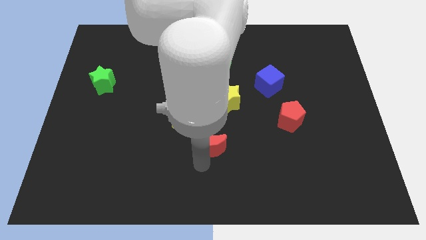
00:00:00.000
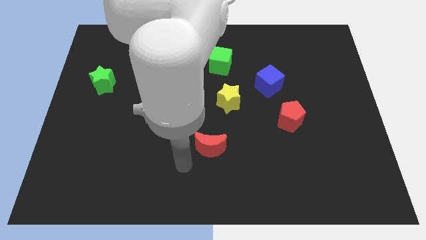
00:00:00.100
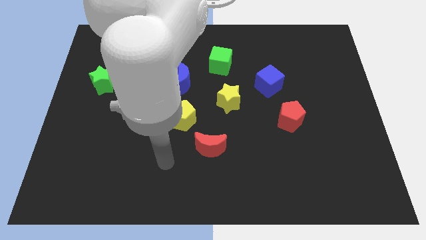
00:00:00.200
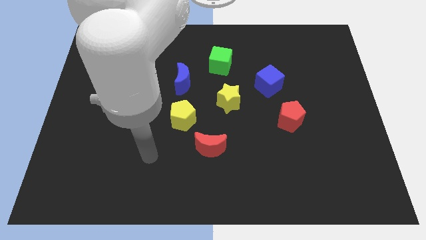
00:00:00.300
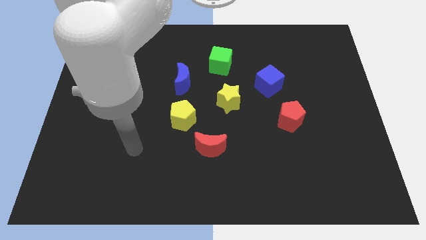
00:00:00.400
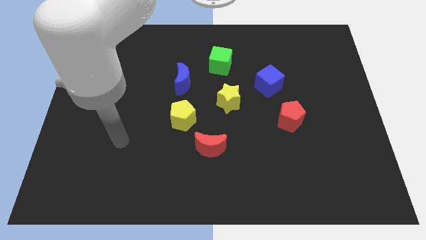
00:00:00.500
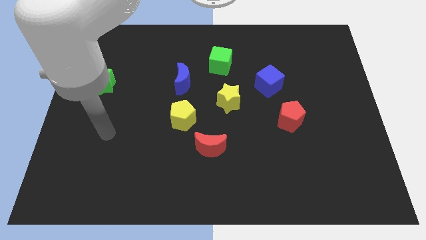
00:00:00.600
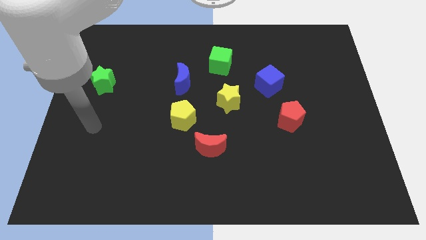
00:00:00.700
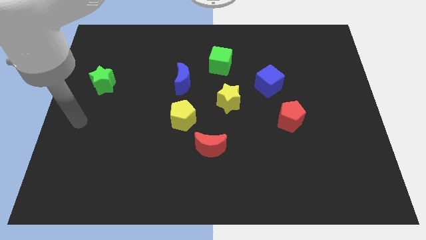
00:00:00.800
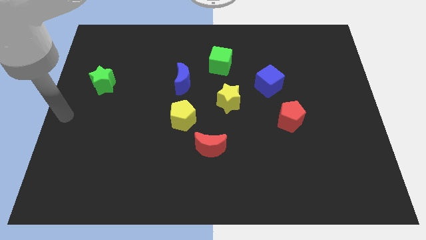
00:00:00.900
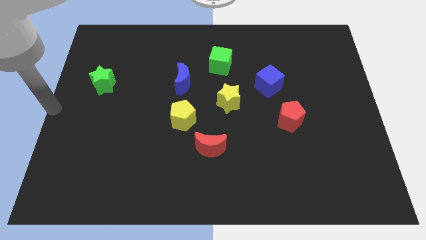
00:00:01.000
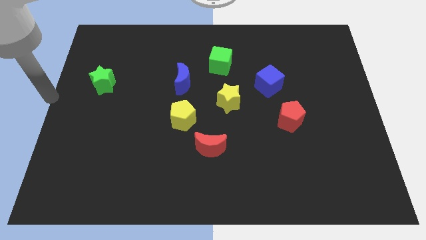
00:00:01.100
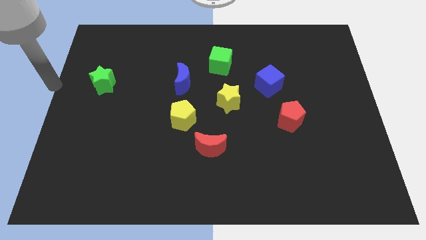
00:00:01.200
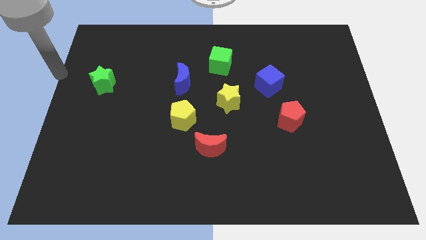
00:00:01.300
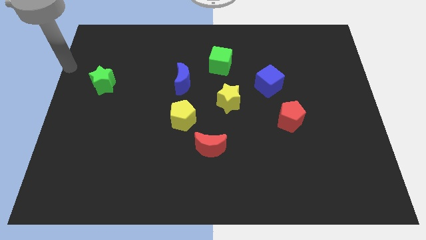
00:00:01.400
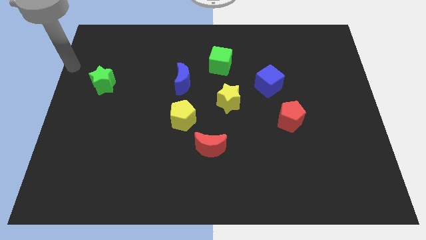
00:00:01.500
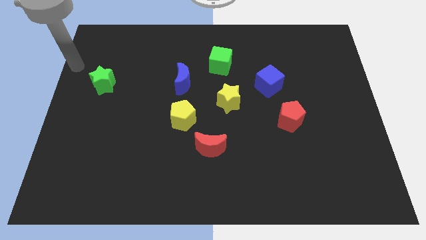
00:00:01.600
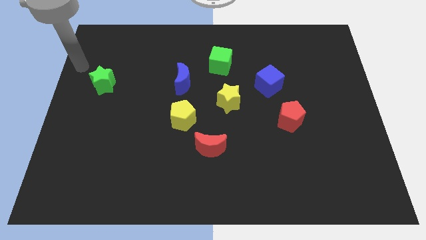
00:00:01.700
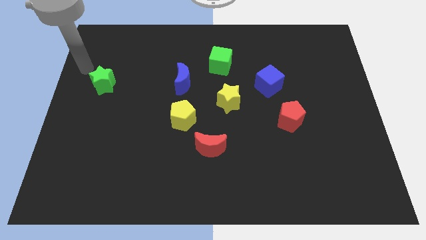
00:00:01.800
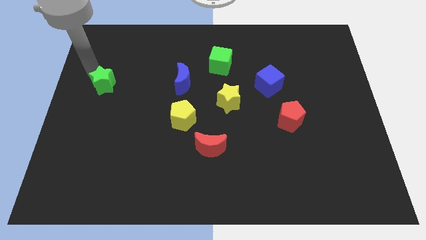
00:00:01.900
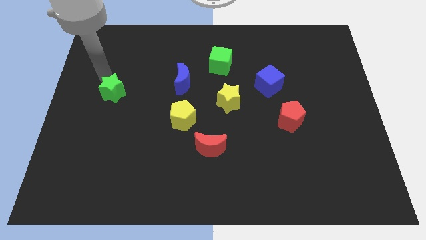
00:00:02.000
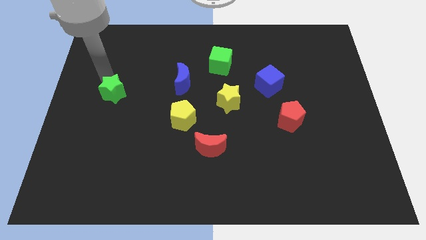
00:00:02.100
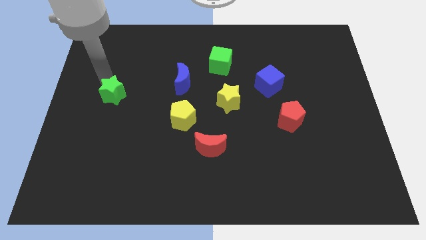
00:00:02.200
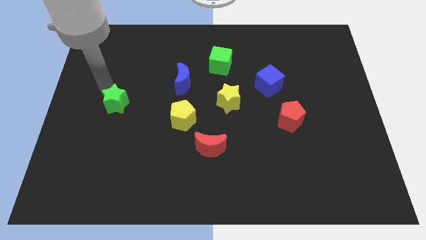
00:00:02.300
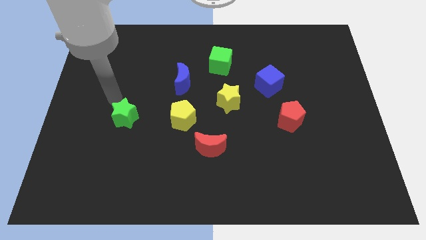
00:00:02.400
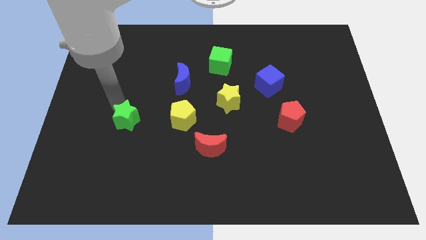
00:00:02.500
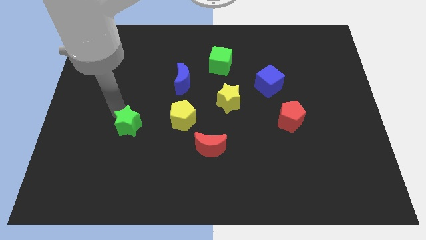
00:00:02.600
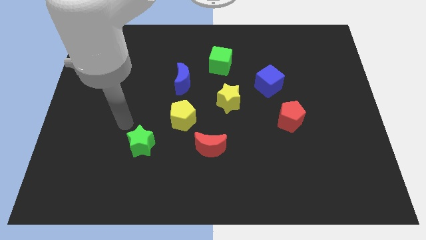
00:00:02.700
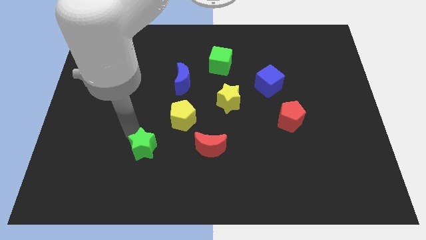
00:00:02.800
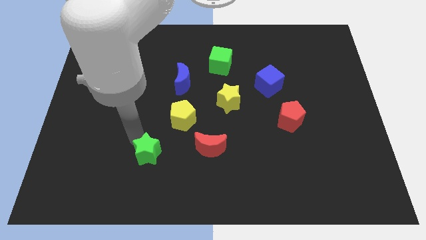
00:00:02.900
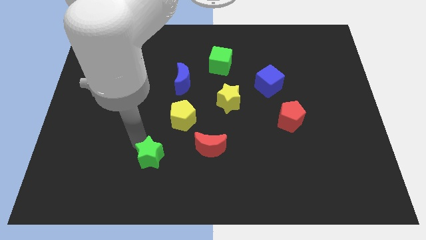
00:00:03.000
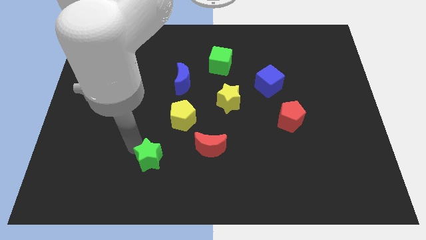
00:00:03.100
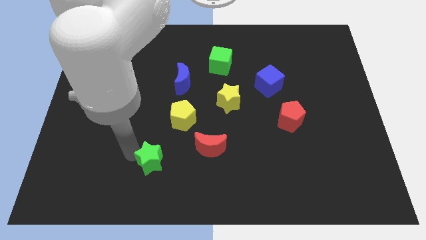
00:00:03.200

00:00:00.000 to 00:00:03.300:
place the green star bottom left to the red moon

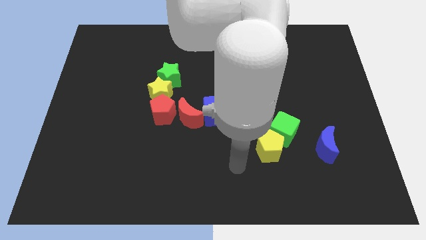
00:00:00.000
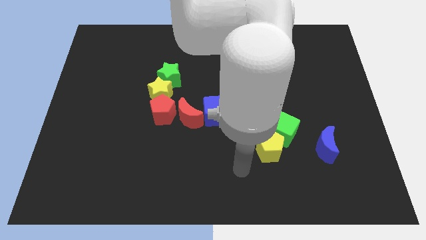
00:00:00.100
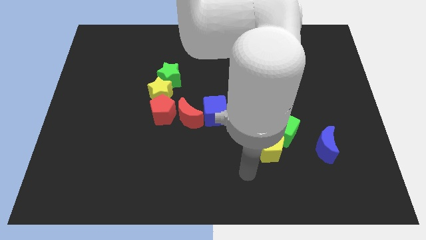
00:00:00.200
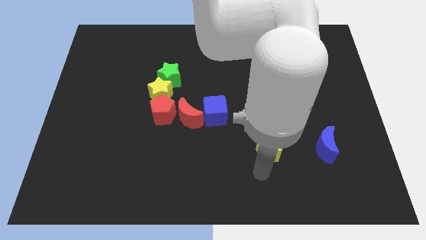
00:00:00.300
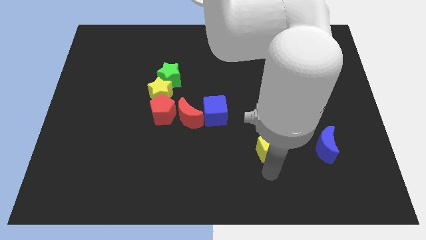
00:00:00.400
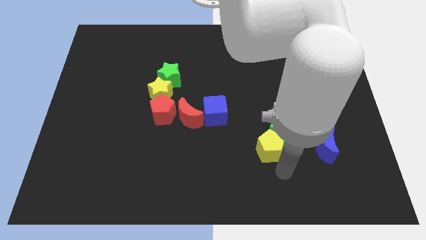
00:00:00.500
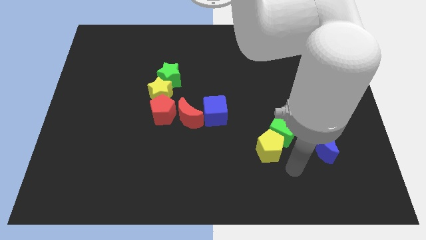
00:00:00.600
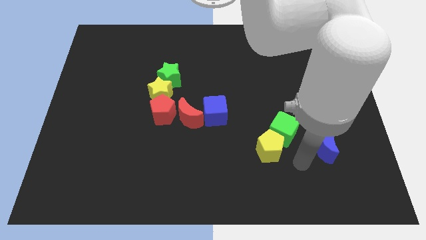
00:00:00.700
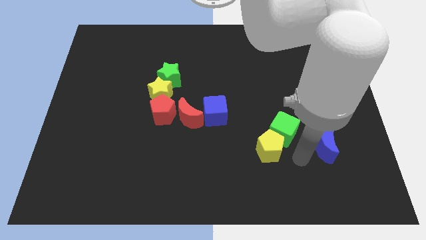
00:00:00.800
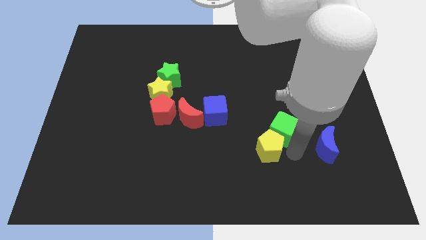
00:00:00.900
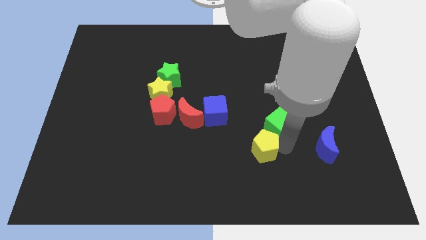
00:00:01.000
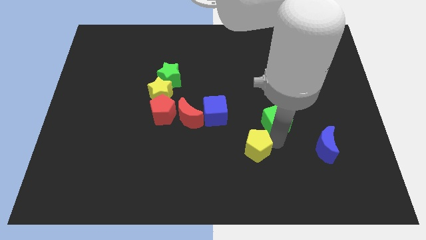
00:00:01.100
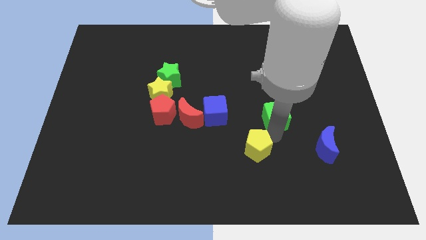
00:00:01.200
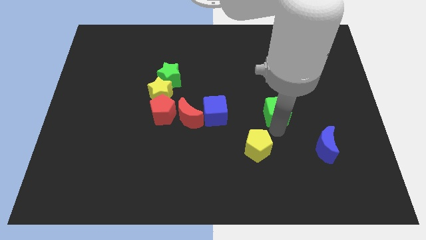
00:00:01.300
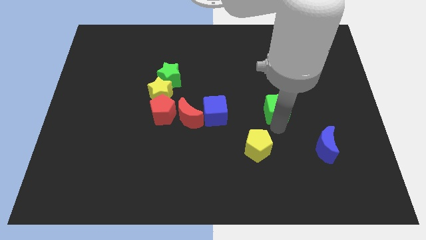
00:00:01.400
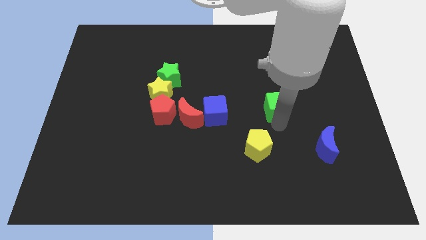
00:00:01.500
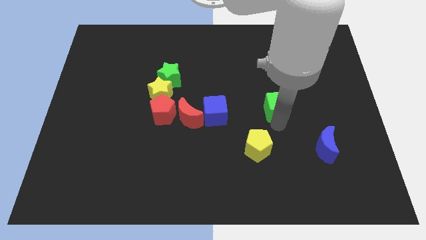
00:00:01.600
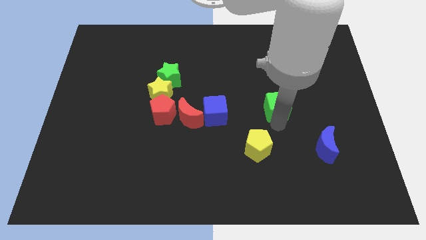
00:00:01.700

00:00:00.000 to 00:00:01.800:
separate the green cube from the yellow pentagon

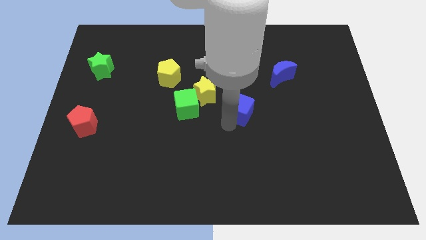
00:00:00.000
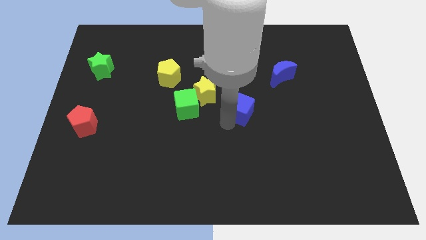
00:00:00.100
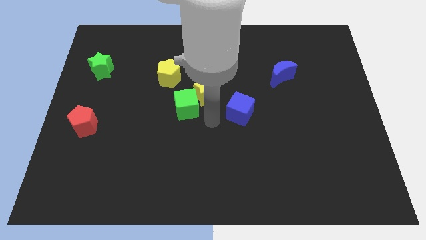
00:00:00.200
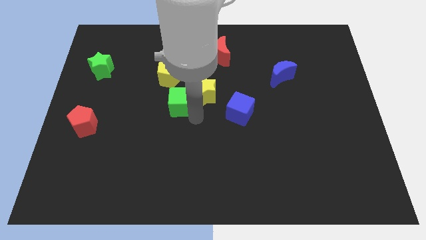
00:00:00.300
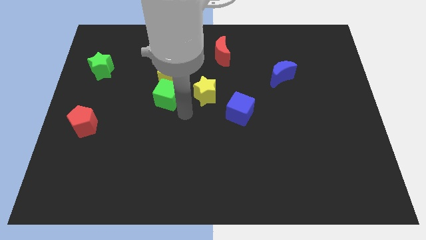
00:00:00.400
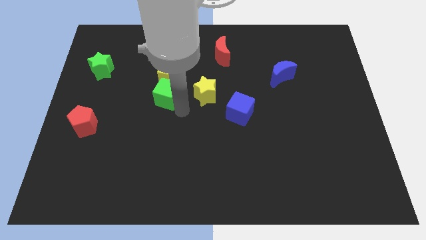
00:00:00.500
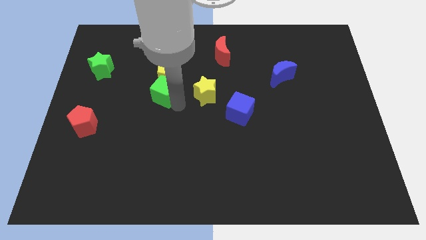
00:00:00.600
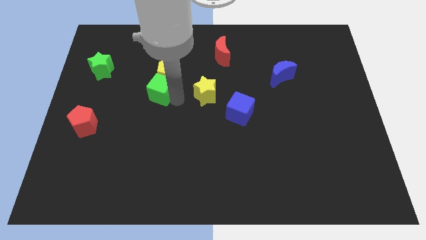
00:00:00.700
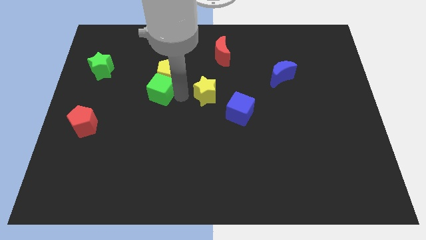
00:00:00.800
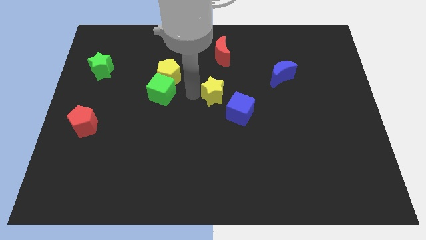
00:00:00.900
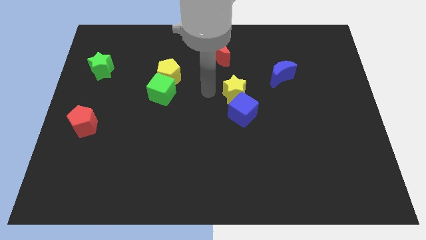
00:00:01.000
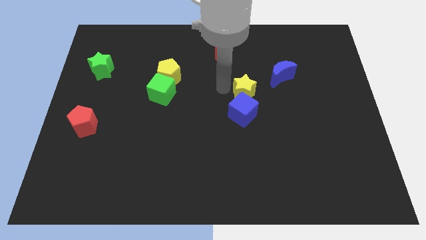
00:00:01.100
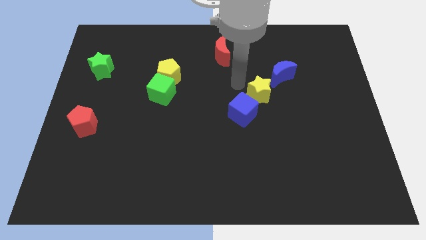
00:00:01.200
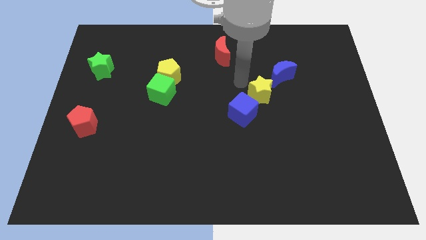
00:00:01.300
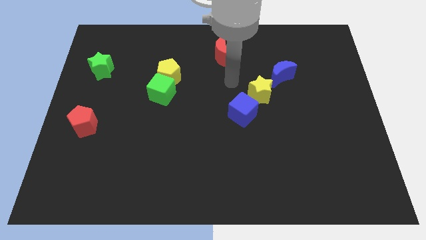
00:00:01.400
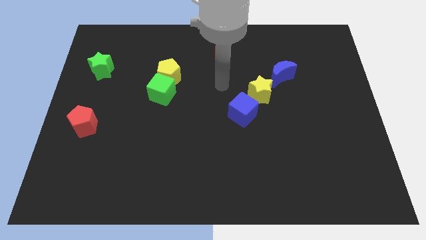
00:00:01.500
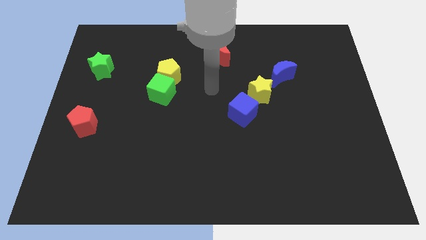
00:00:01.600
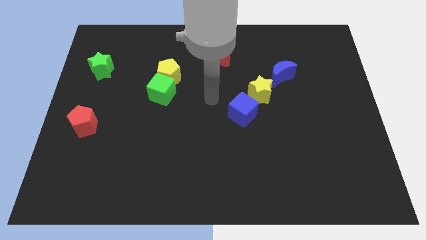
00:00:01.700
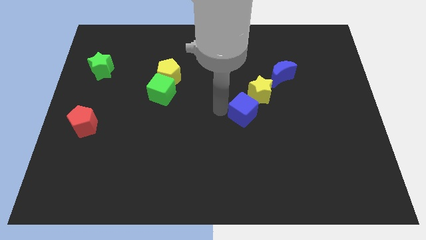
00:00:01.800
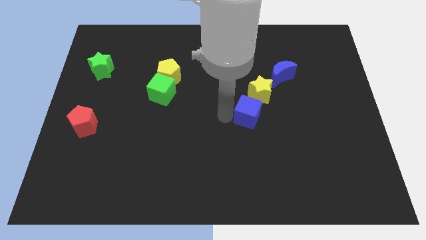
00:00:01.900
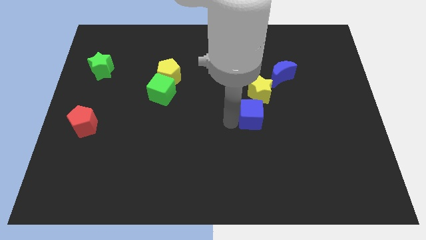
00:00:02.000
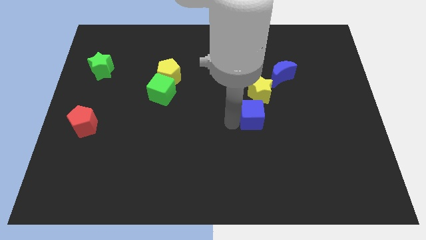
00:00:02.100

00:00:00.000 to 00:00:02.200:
move yellow star in between the blue moon and the blue cube

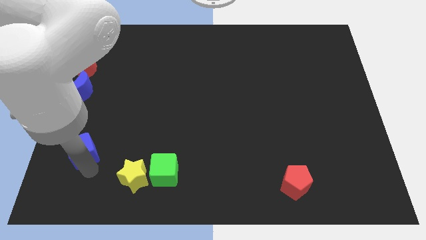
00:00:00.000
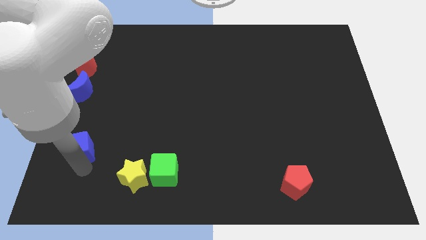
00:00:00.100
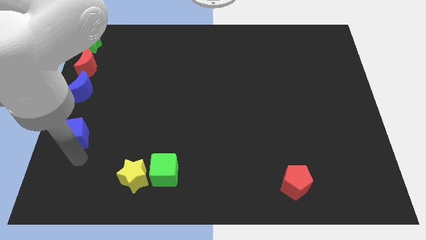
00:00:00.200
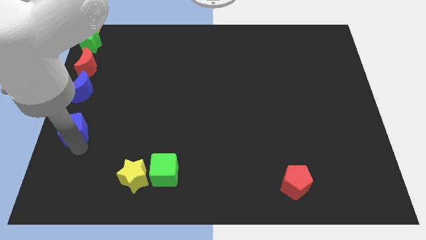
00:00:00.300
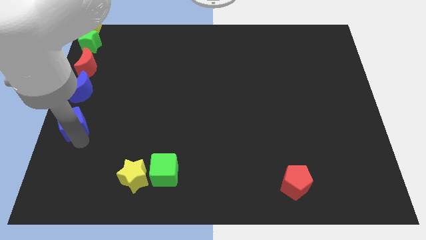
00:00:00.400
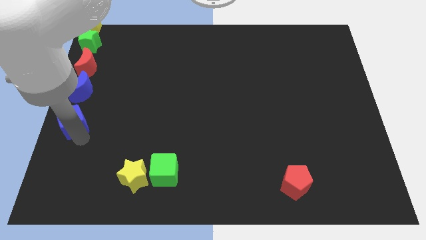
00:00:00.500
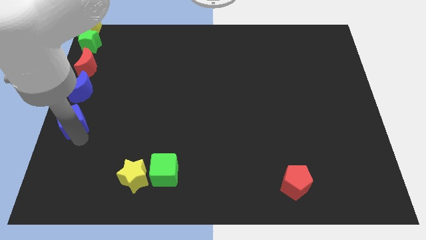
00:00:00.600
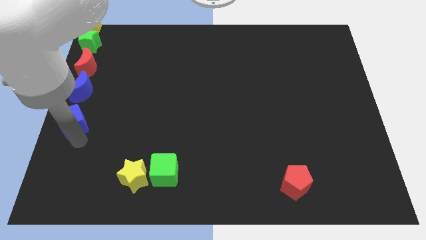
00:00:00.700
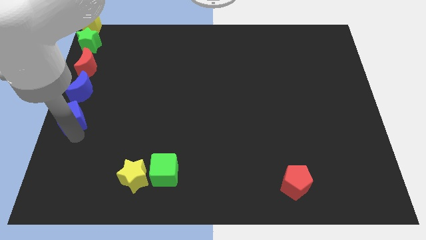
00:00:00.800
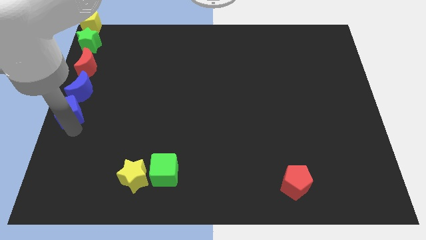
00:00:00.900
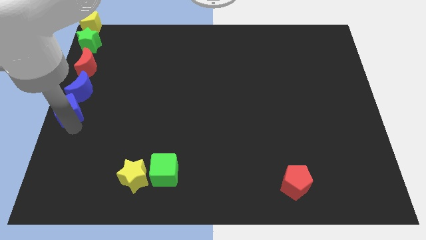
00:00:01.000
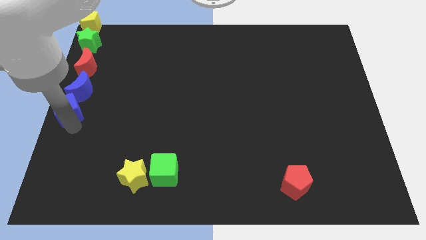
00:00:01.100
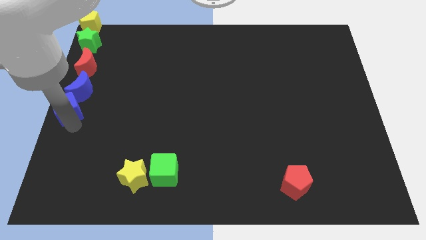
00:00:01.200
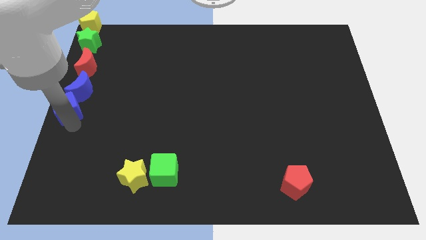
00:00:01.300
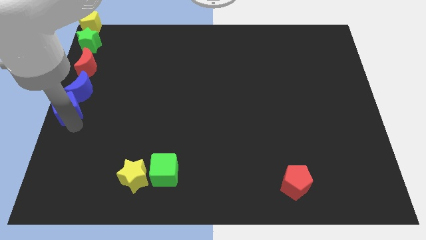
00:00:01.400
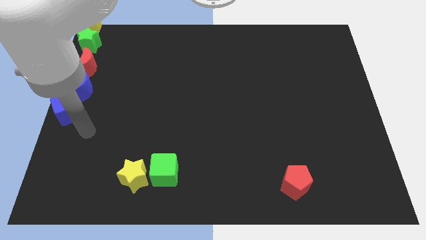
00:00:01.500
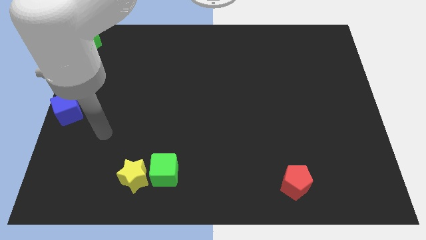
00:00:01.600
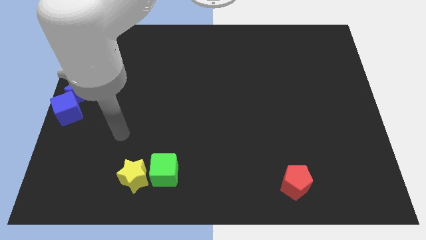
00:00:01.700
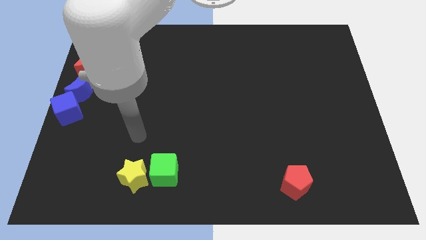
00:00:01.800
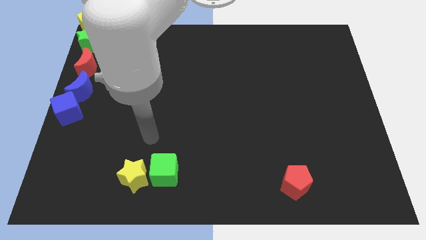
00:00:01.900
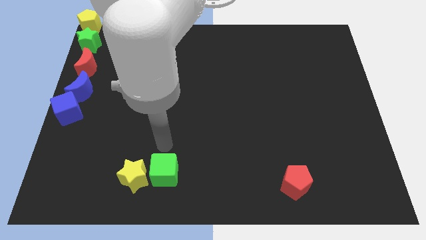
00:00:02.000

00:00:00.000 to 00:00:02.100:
put the blue cube at the bottom of the blue moon
